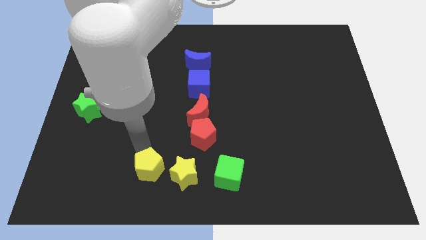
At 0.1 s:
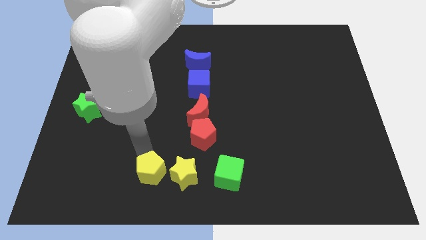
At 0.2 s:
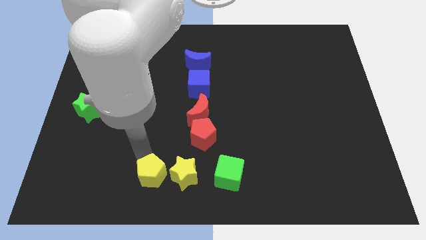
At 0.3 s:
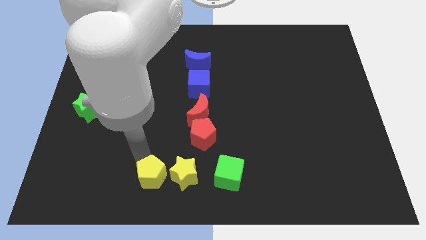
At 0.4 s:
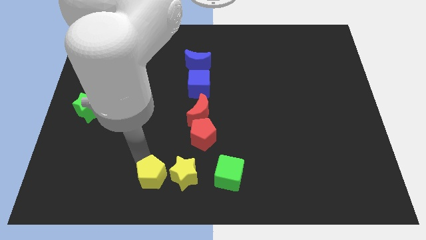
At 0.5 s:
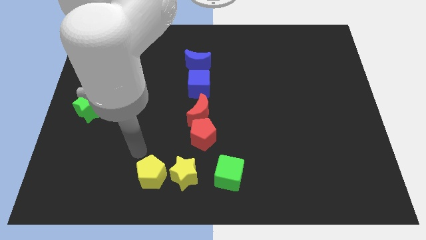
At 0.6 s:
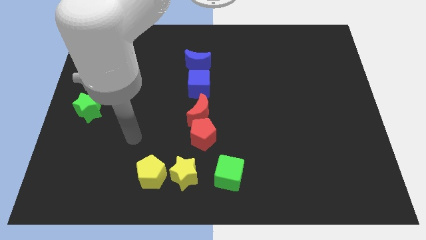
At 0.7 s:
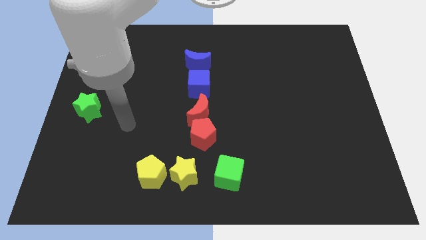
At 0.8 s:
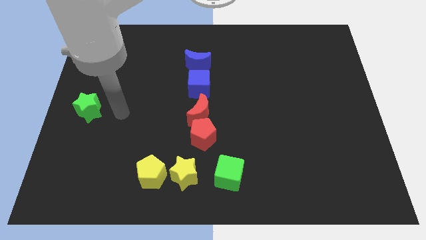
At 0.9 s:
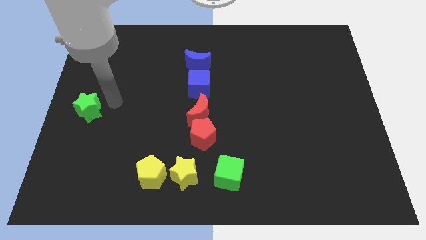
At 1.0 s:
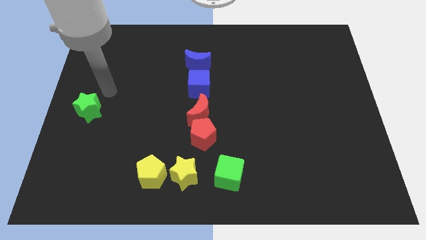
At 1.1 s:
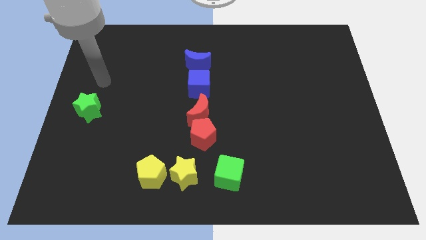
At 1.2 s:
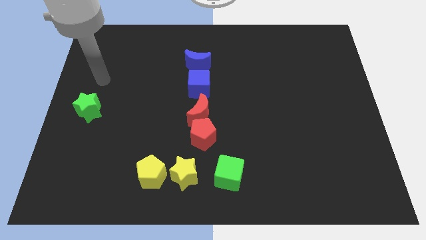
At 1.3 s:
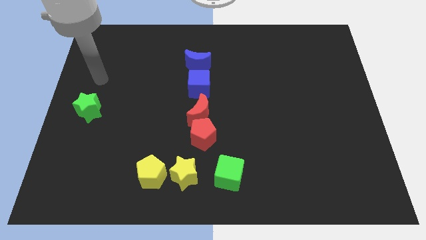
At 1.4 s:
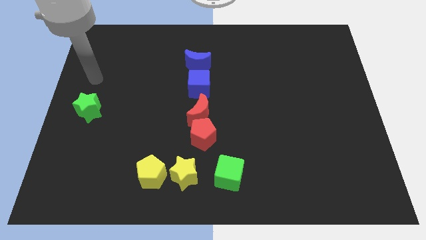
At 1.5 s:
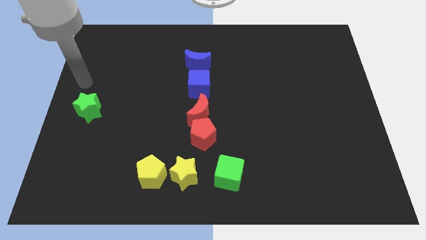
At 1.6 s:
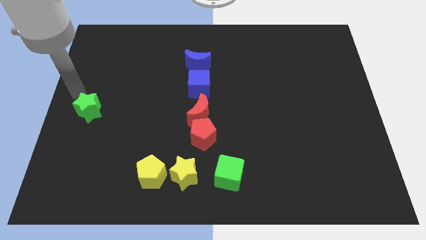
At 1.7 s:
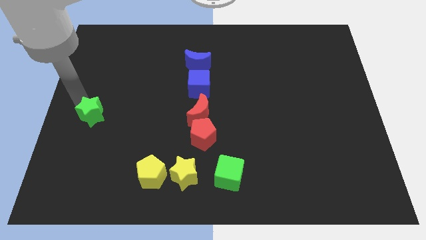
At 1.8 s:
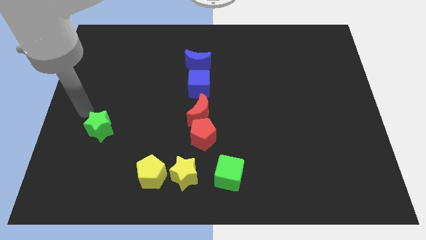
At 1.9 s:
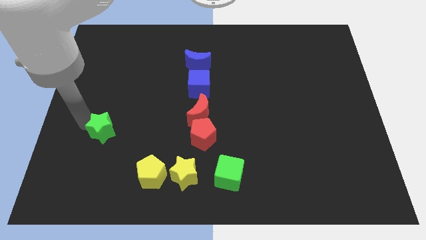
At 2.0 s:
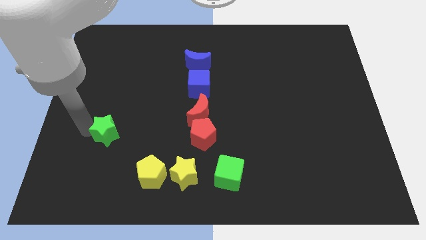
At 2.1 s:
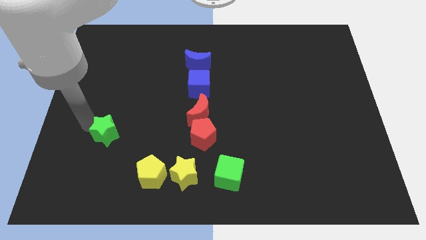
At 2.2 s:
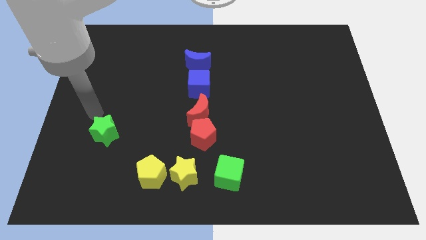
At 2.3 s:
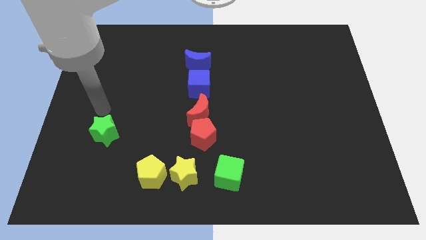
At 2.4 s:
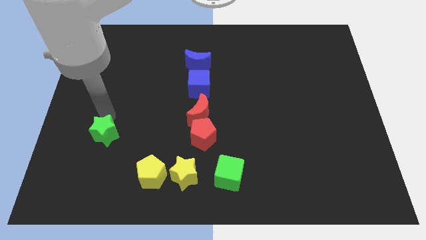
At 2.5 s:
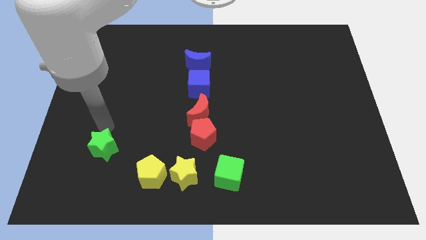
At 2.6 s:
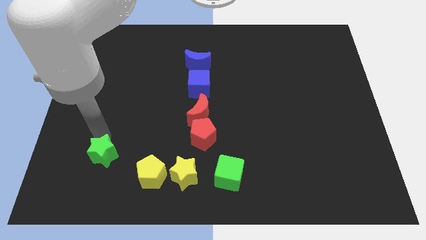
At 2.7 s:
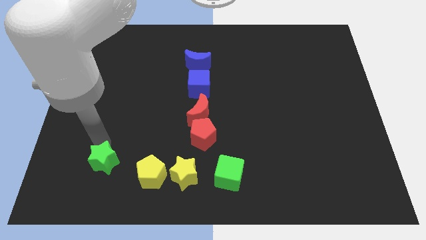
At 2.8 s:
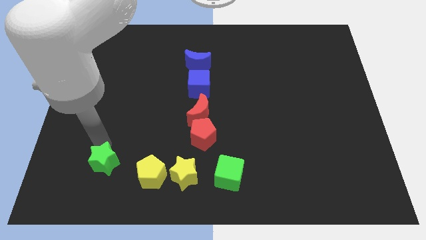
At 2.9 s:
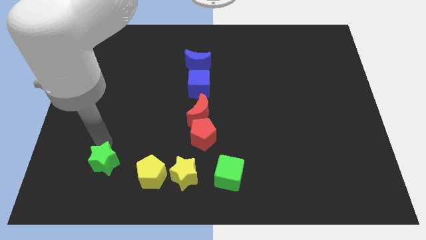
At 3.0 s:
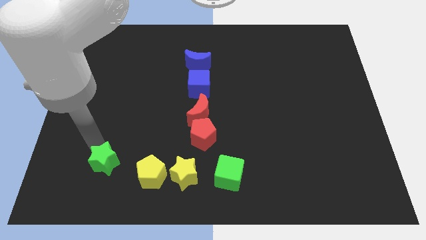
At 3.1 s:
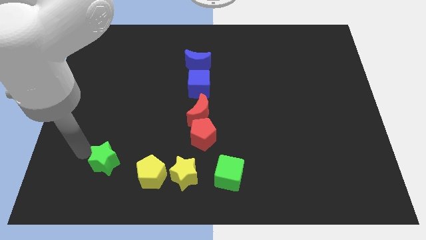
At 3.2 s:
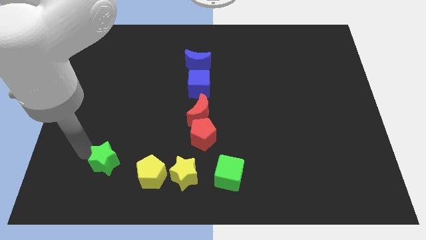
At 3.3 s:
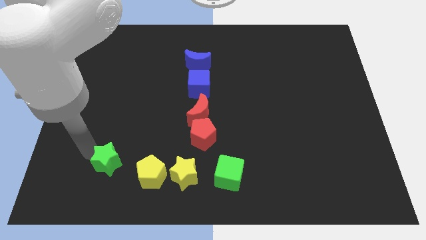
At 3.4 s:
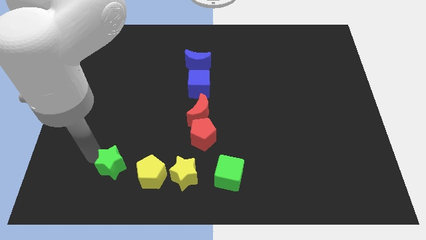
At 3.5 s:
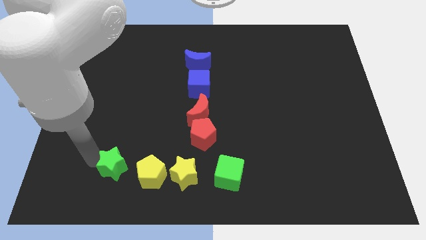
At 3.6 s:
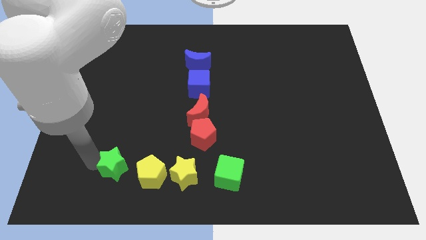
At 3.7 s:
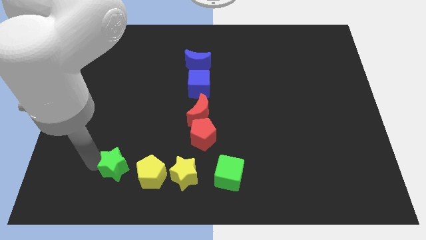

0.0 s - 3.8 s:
place the green star to the left of the yellow pentagon

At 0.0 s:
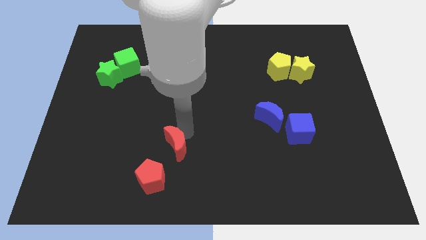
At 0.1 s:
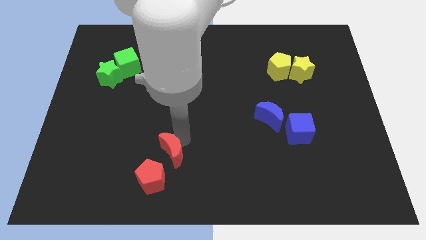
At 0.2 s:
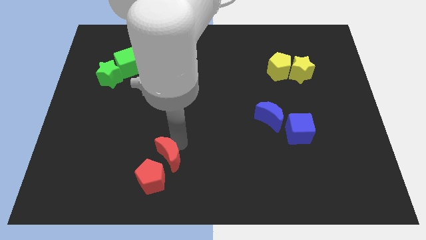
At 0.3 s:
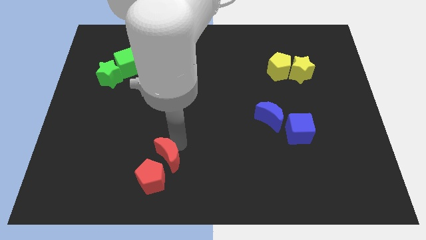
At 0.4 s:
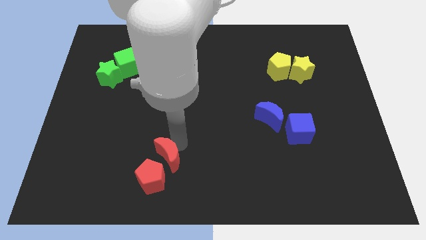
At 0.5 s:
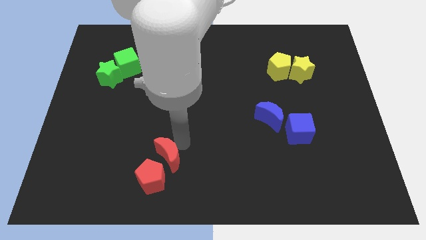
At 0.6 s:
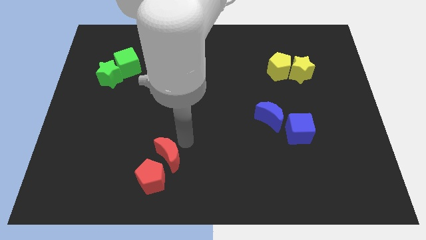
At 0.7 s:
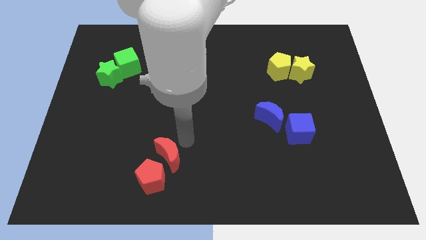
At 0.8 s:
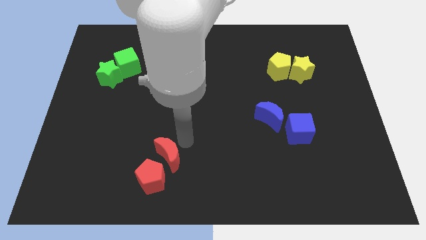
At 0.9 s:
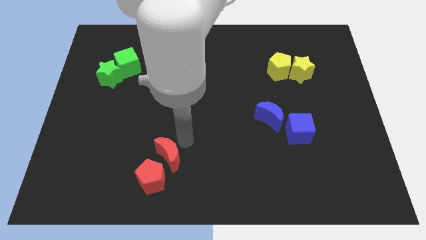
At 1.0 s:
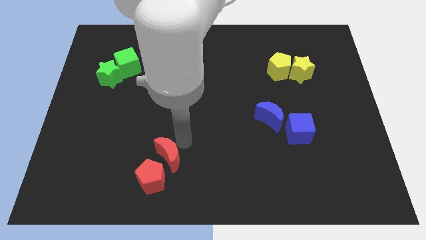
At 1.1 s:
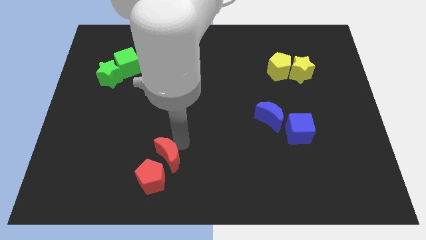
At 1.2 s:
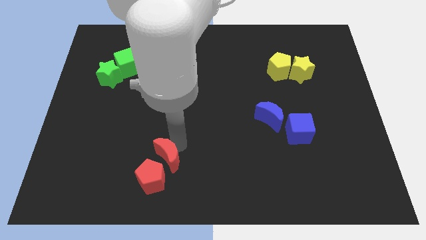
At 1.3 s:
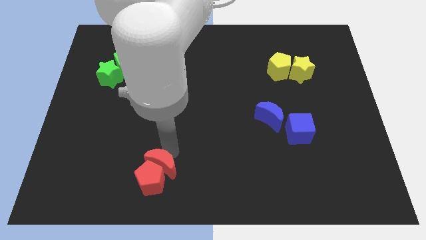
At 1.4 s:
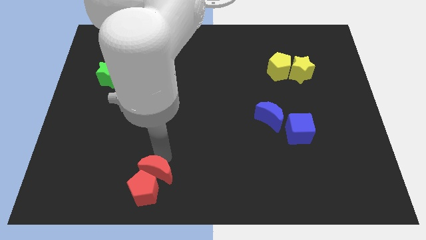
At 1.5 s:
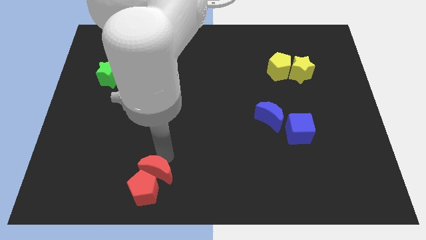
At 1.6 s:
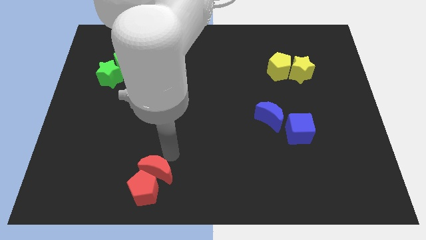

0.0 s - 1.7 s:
place the red moon to the top right of the red pentagon

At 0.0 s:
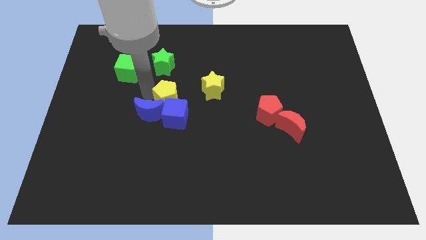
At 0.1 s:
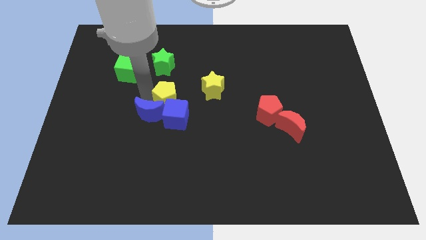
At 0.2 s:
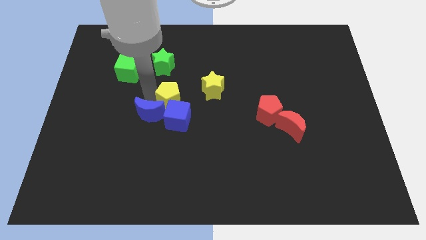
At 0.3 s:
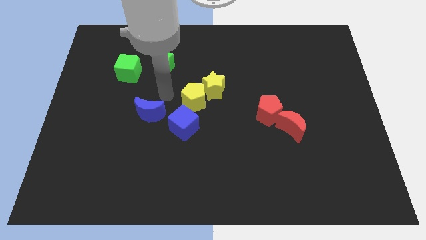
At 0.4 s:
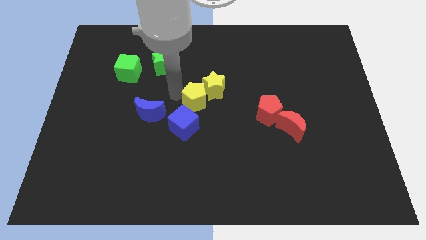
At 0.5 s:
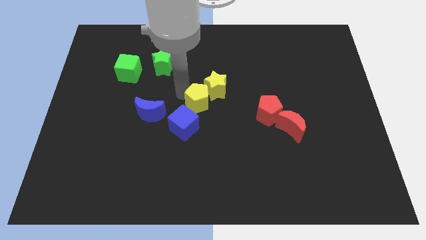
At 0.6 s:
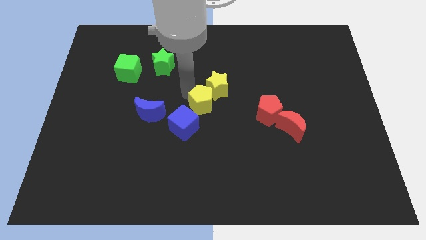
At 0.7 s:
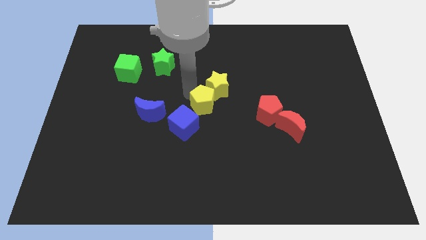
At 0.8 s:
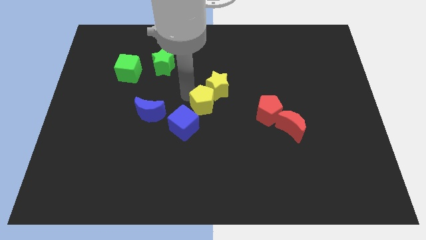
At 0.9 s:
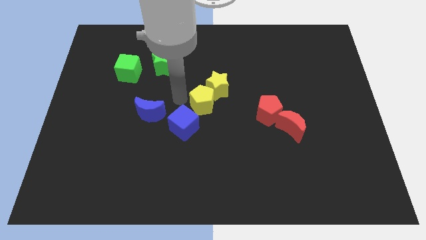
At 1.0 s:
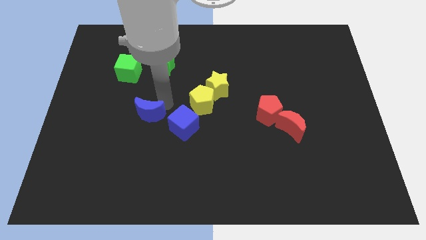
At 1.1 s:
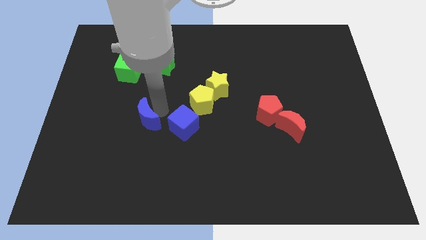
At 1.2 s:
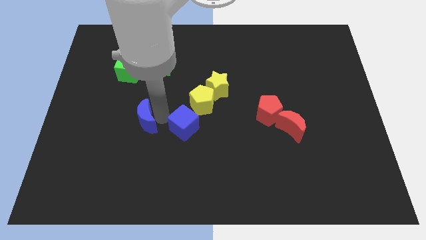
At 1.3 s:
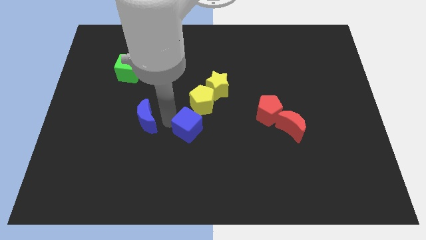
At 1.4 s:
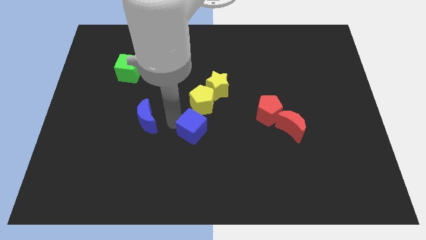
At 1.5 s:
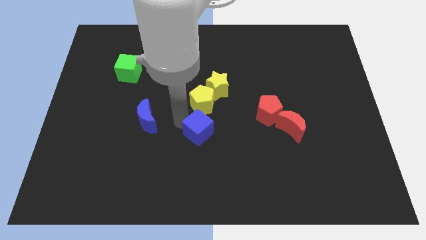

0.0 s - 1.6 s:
place the yellow pentagon in between the yellow star and blue cube

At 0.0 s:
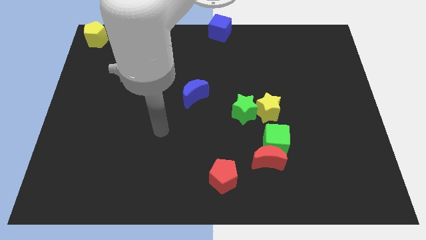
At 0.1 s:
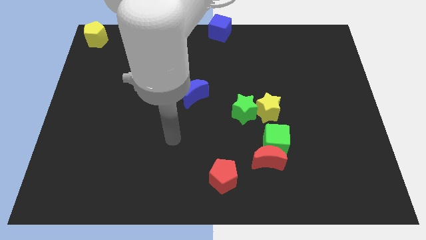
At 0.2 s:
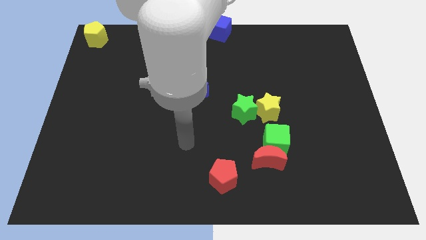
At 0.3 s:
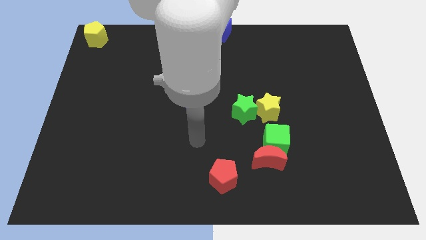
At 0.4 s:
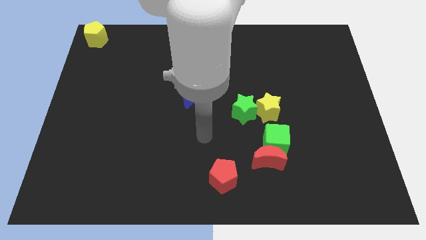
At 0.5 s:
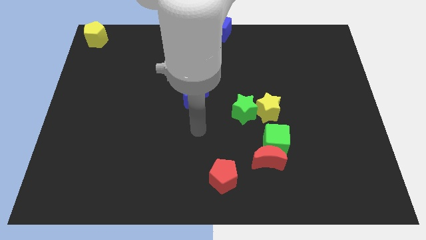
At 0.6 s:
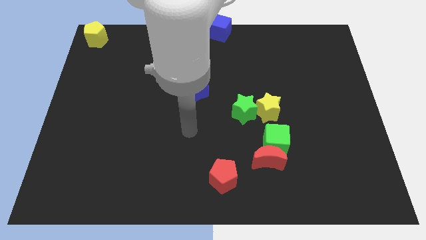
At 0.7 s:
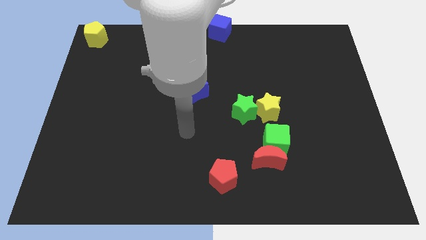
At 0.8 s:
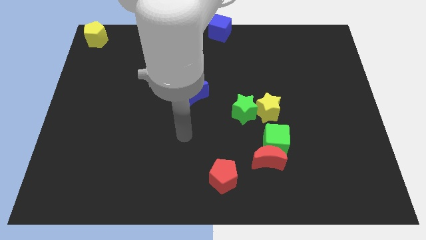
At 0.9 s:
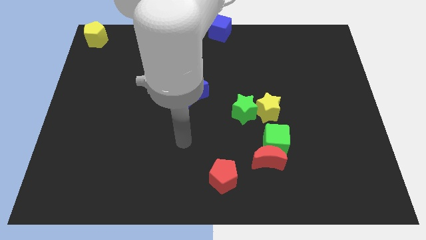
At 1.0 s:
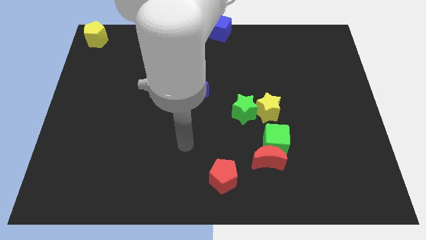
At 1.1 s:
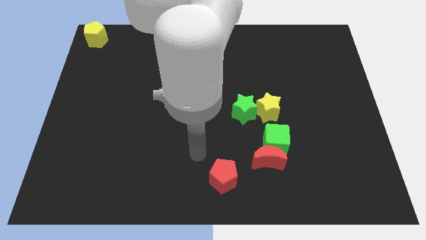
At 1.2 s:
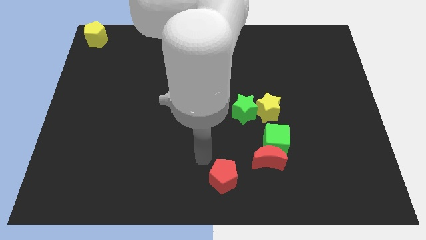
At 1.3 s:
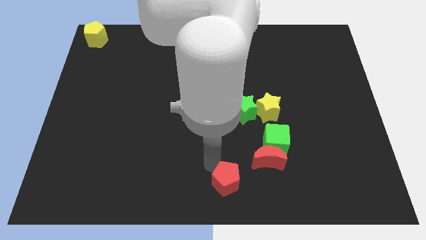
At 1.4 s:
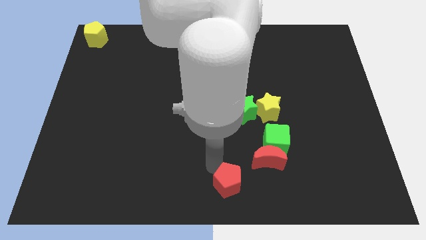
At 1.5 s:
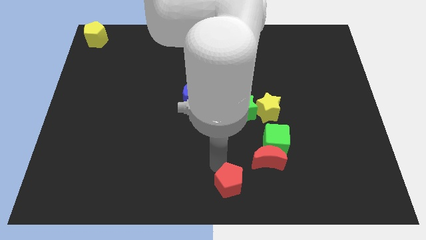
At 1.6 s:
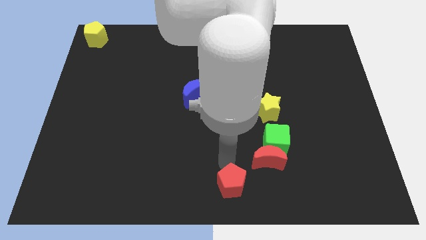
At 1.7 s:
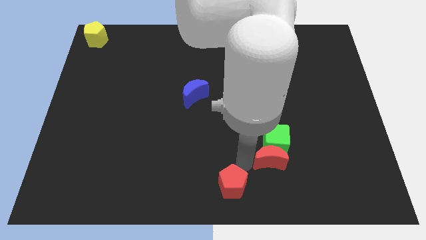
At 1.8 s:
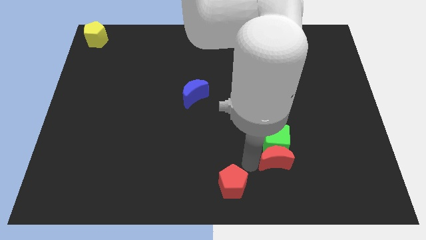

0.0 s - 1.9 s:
move the red pentagon down slightly
